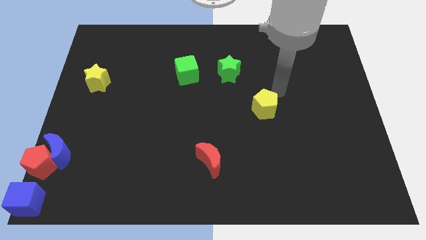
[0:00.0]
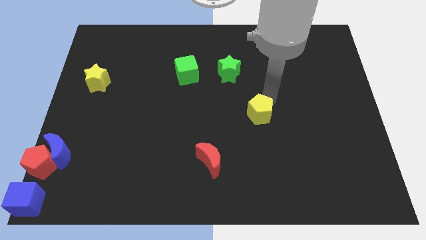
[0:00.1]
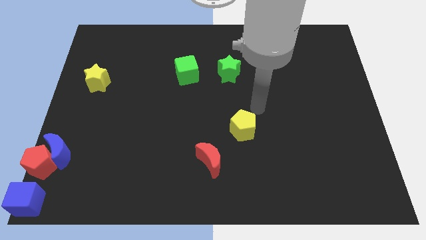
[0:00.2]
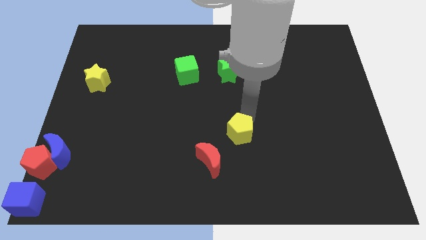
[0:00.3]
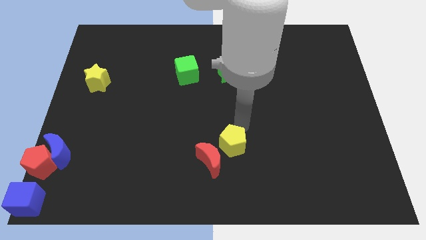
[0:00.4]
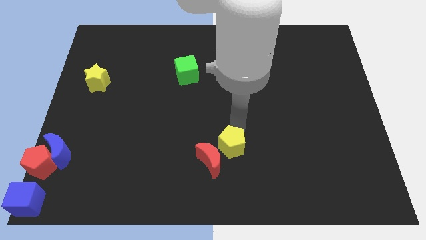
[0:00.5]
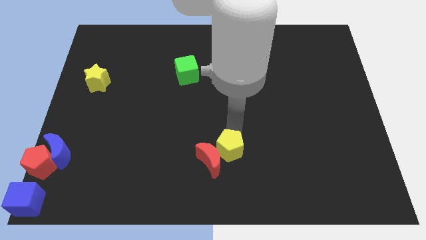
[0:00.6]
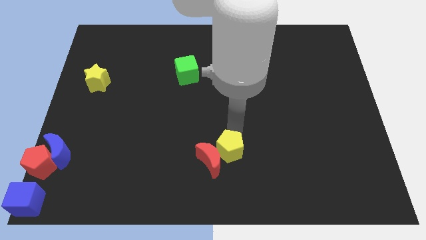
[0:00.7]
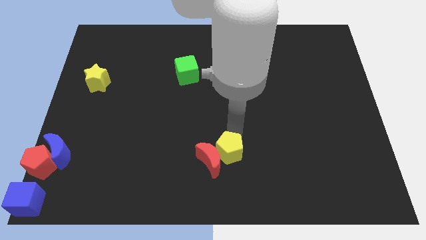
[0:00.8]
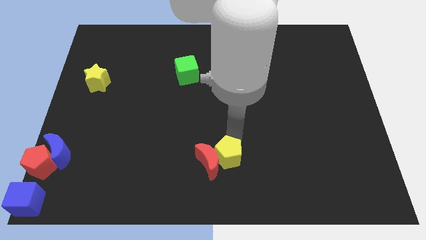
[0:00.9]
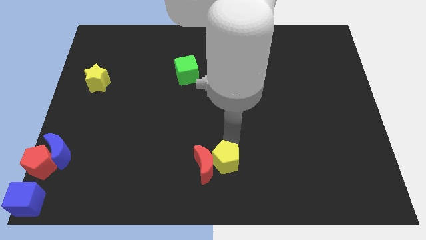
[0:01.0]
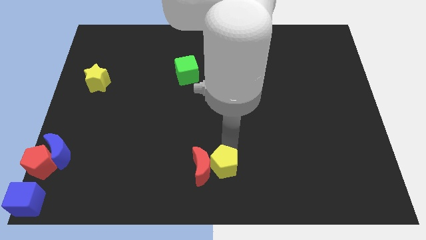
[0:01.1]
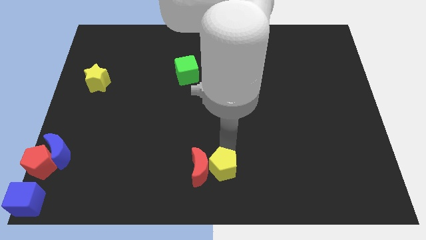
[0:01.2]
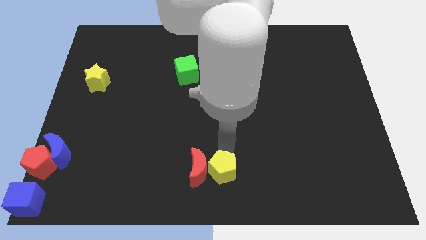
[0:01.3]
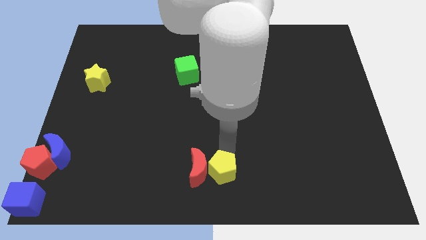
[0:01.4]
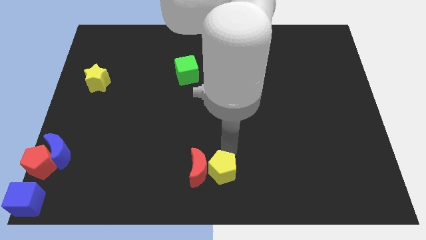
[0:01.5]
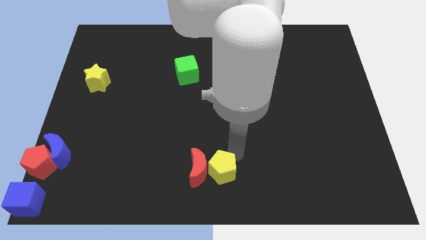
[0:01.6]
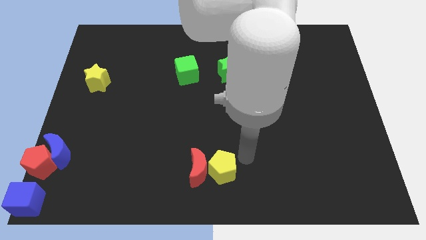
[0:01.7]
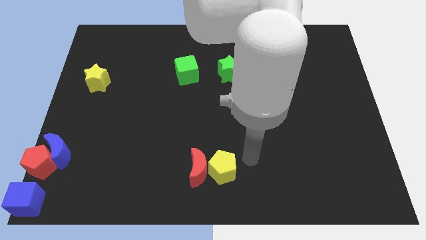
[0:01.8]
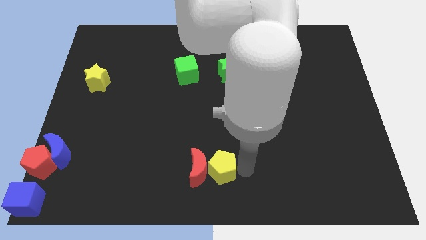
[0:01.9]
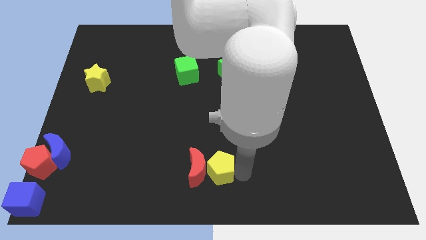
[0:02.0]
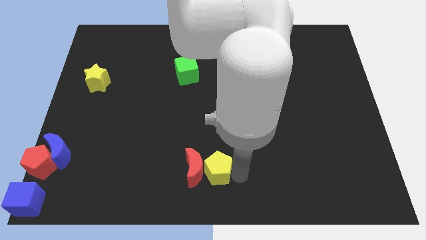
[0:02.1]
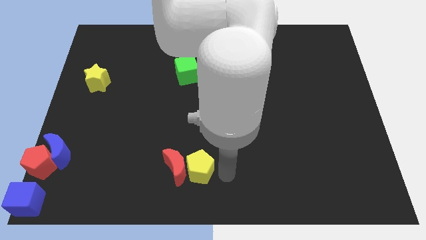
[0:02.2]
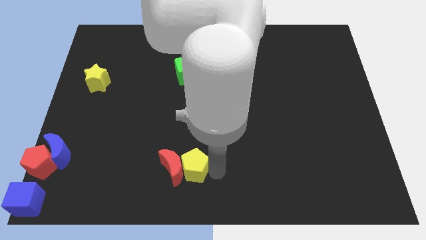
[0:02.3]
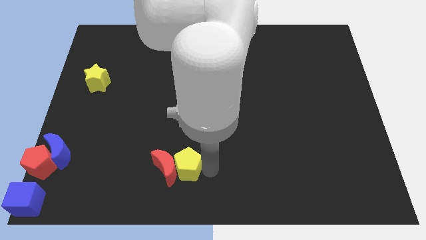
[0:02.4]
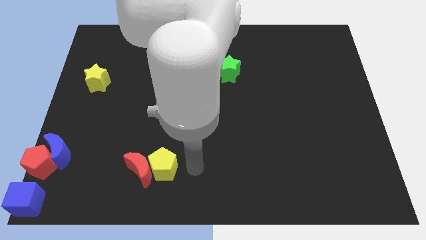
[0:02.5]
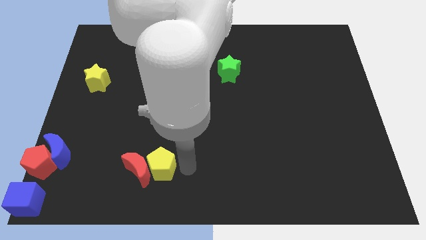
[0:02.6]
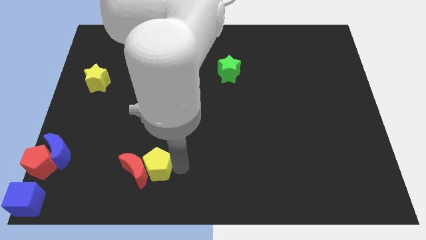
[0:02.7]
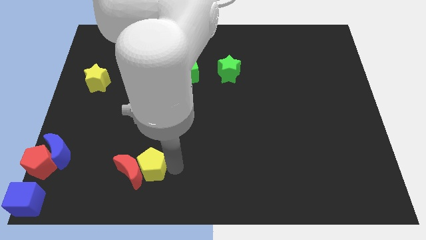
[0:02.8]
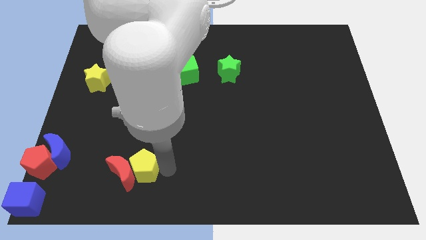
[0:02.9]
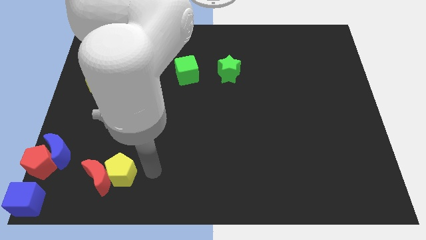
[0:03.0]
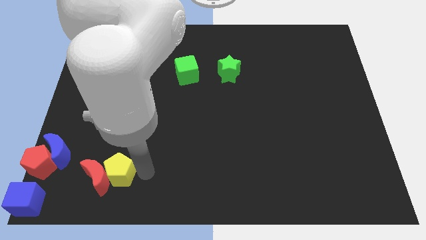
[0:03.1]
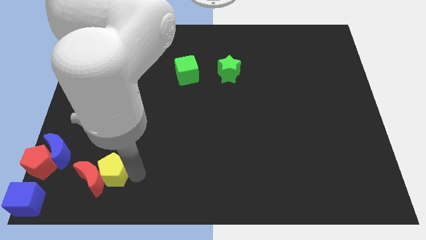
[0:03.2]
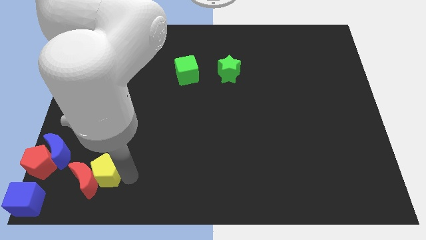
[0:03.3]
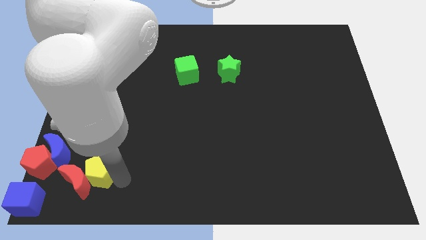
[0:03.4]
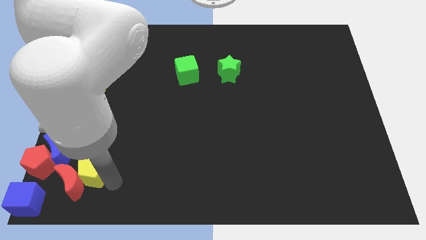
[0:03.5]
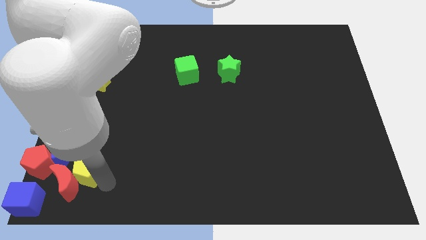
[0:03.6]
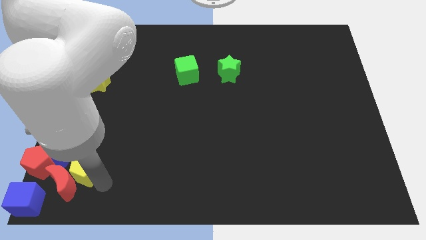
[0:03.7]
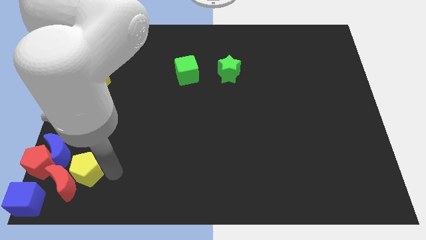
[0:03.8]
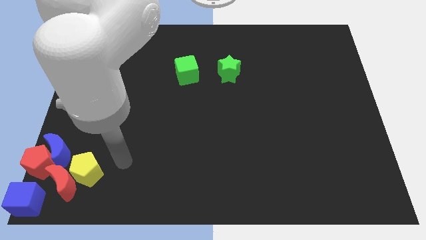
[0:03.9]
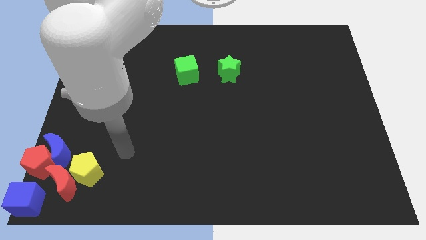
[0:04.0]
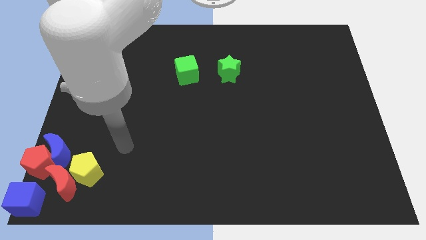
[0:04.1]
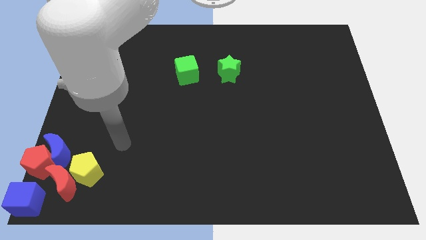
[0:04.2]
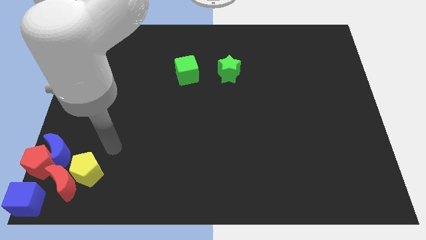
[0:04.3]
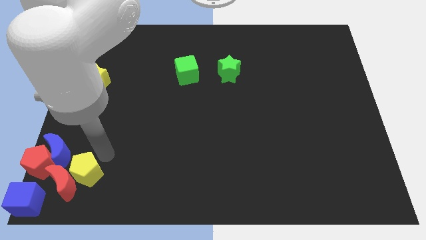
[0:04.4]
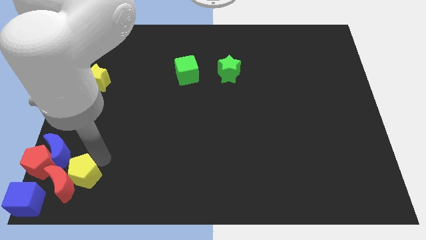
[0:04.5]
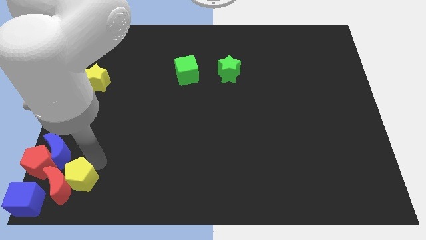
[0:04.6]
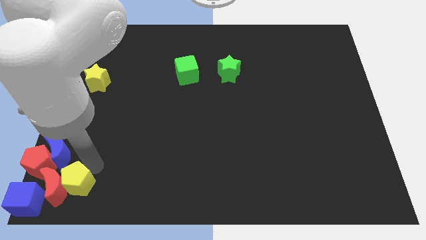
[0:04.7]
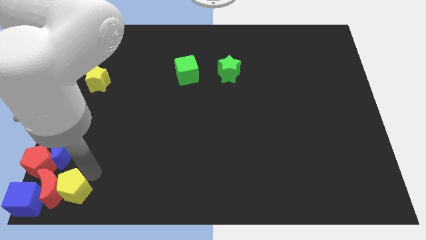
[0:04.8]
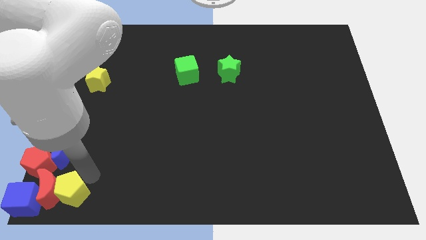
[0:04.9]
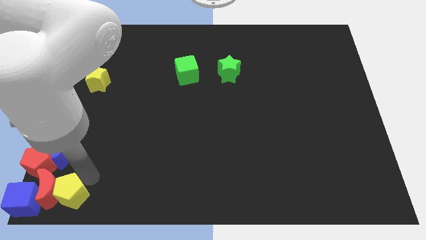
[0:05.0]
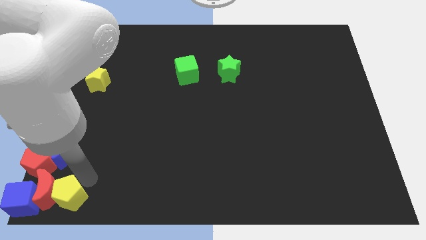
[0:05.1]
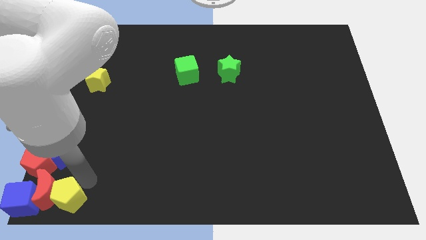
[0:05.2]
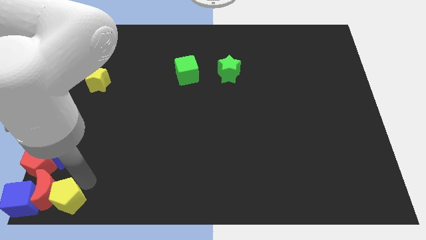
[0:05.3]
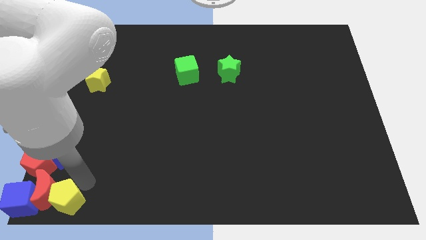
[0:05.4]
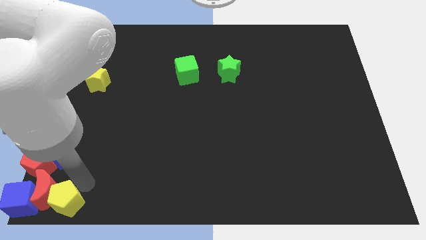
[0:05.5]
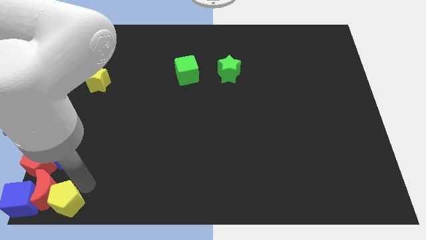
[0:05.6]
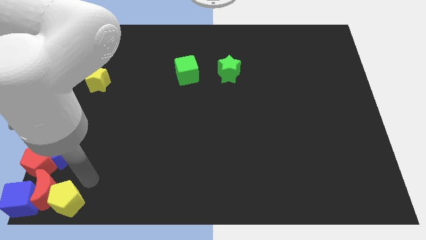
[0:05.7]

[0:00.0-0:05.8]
push the yellow pentagon into the red crescent towards close to the blue cube

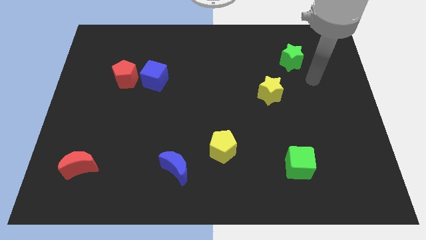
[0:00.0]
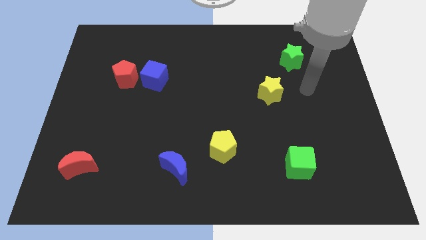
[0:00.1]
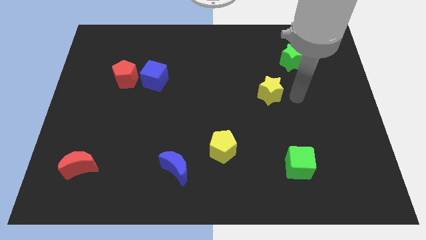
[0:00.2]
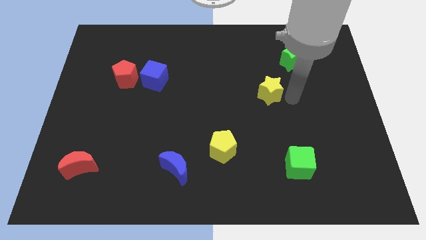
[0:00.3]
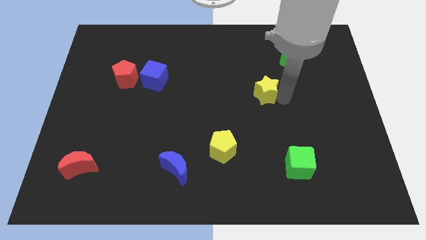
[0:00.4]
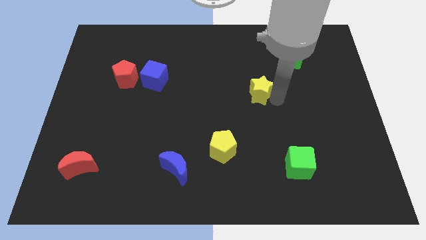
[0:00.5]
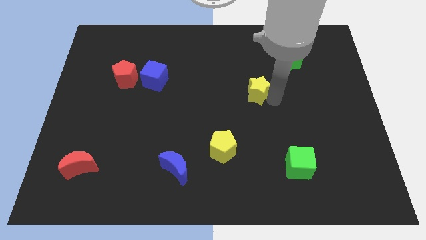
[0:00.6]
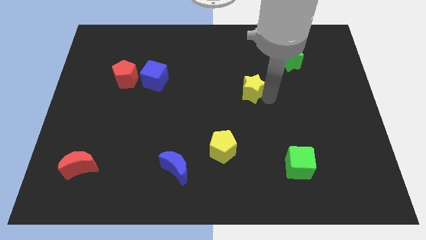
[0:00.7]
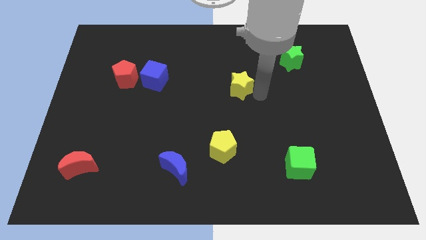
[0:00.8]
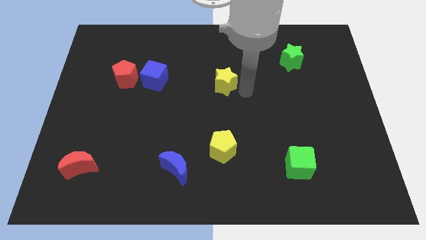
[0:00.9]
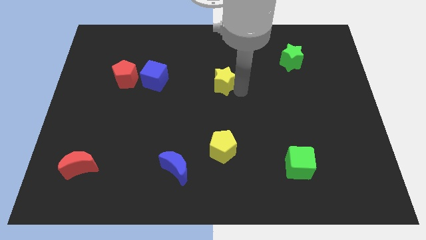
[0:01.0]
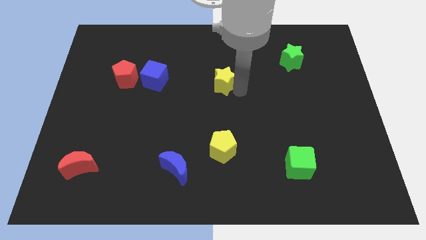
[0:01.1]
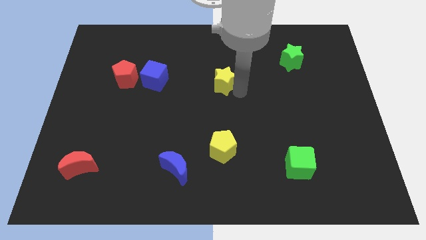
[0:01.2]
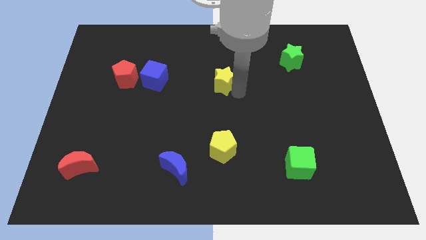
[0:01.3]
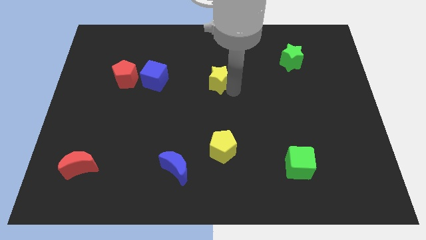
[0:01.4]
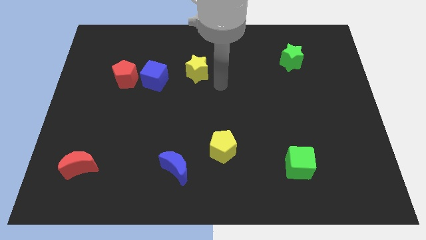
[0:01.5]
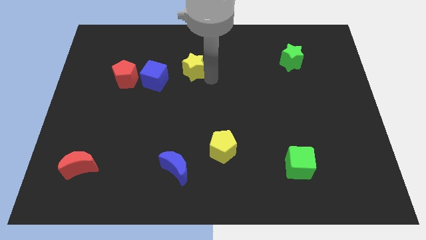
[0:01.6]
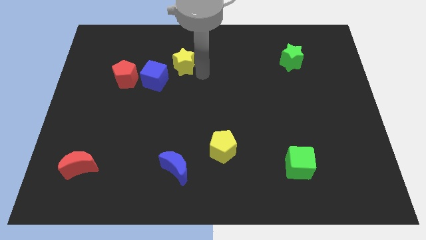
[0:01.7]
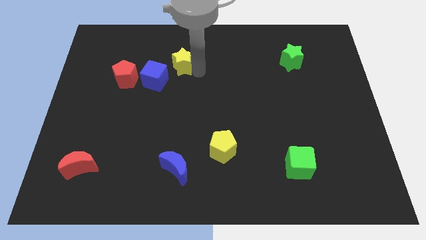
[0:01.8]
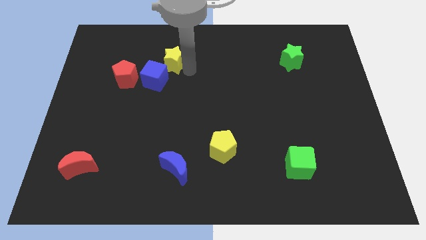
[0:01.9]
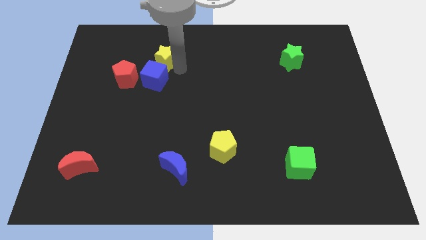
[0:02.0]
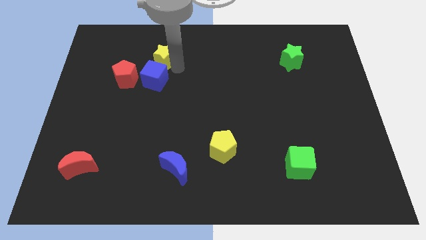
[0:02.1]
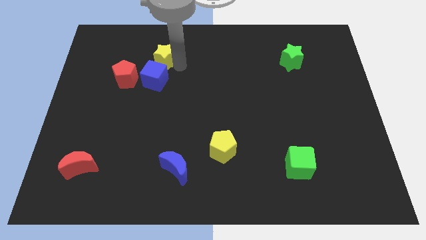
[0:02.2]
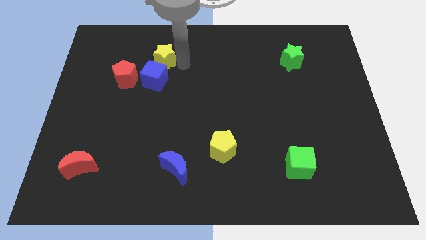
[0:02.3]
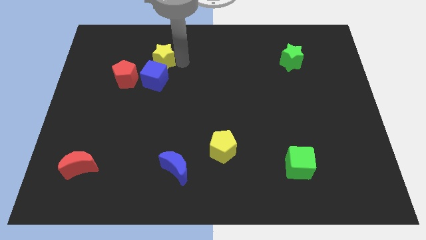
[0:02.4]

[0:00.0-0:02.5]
move the yellow star diagonally above the blue cube

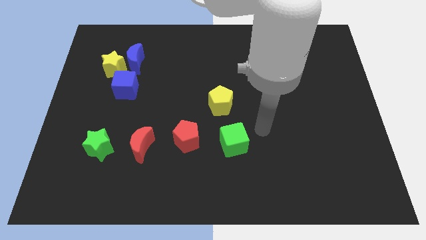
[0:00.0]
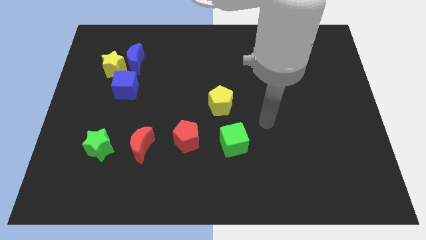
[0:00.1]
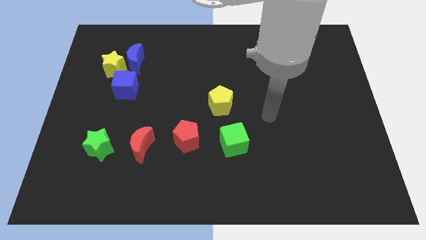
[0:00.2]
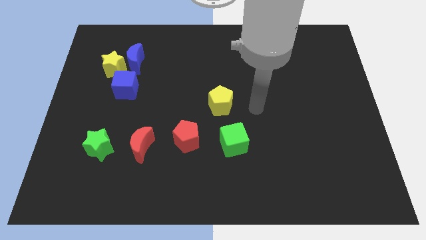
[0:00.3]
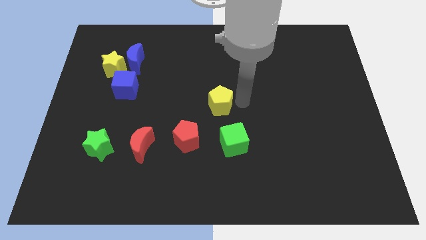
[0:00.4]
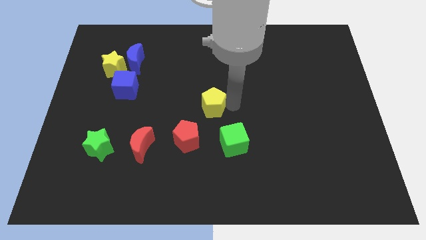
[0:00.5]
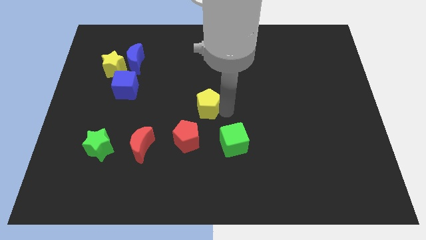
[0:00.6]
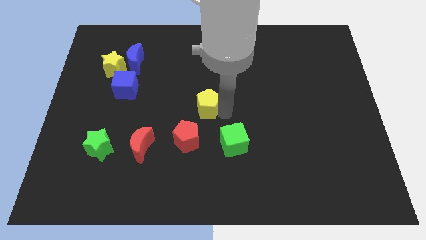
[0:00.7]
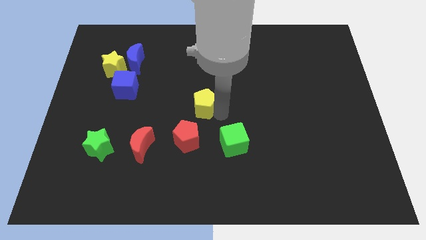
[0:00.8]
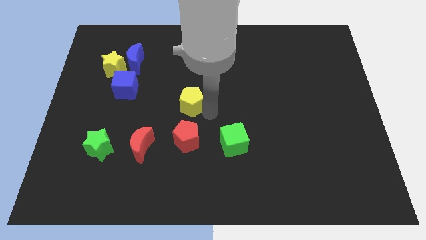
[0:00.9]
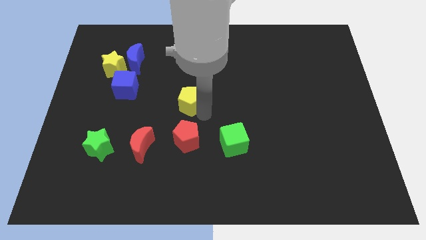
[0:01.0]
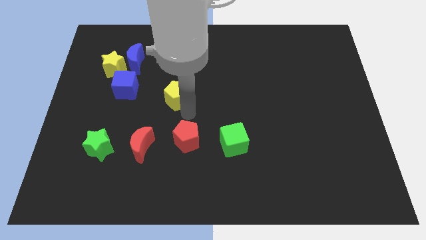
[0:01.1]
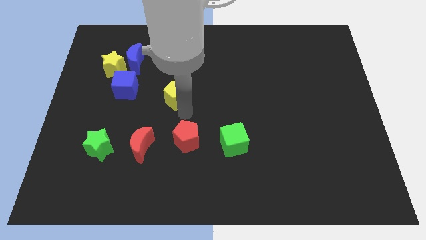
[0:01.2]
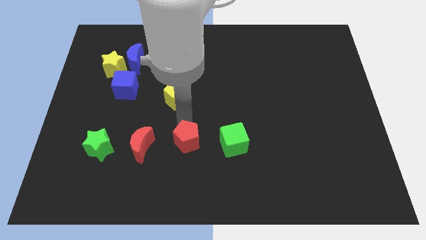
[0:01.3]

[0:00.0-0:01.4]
put the yellow pentagon to the top left side of the red pentagon
